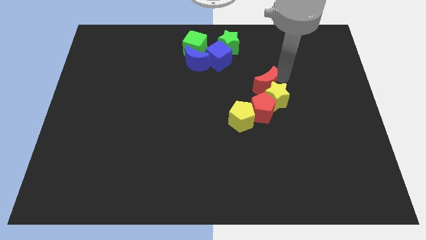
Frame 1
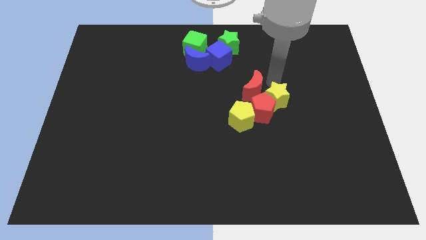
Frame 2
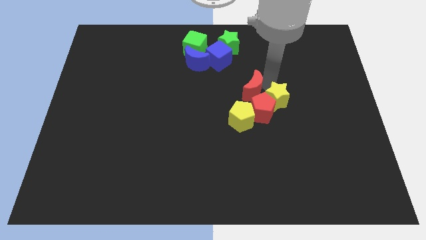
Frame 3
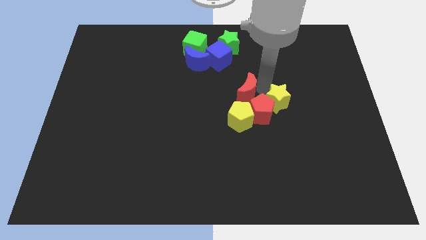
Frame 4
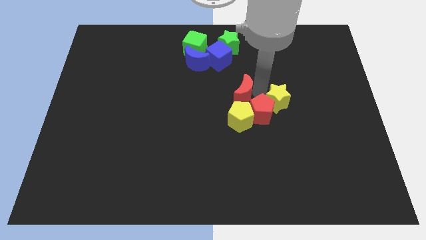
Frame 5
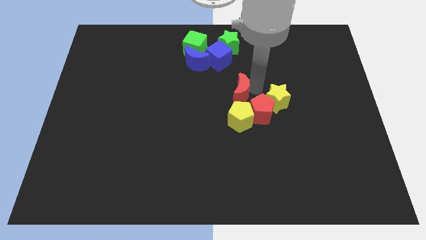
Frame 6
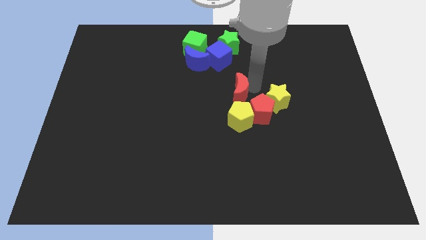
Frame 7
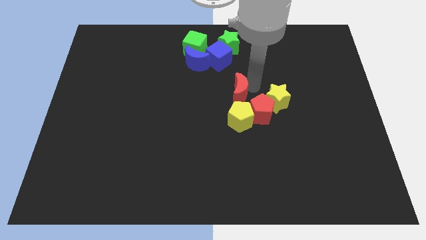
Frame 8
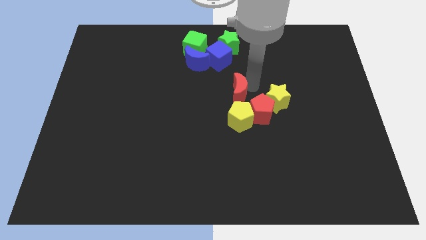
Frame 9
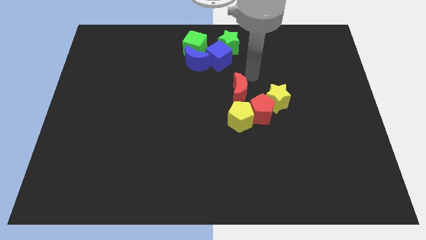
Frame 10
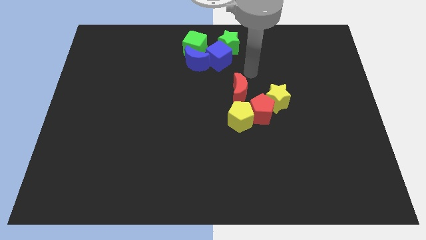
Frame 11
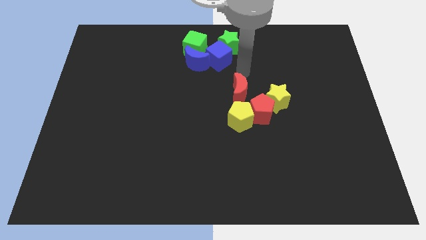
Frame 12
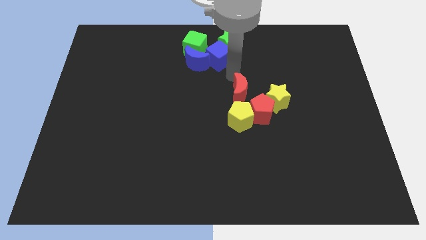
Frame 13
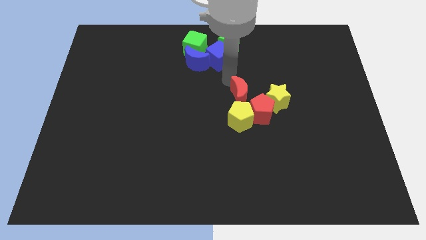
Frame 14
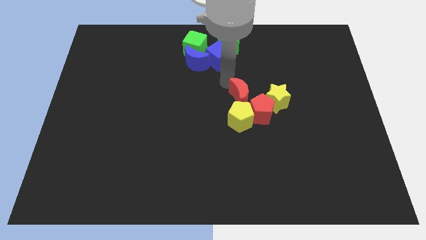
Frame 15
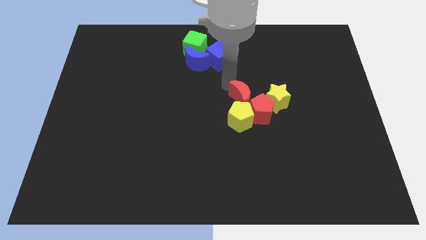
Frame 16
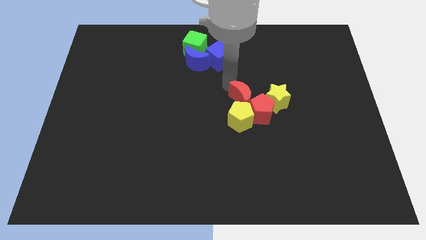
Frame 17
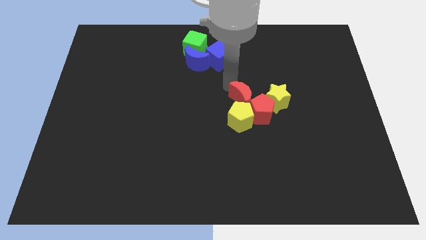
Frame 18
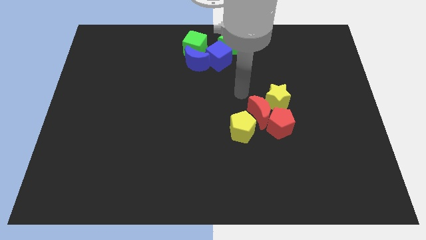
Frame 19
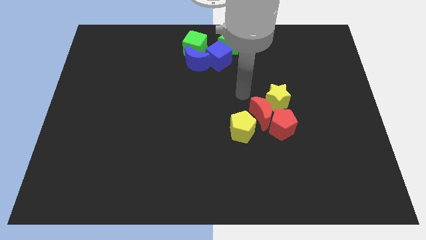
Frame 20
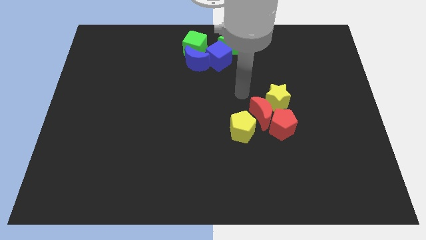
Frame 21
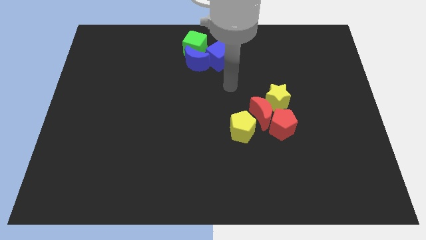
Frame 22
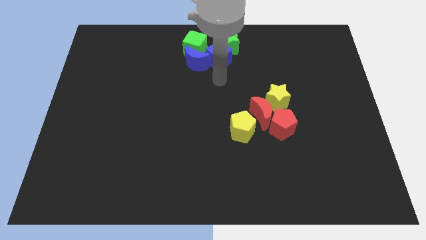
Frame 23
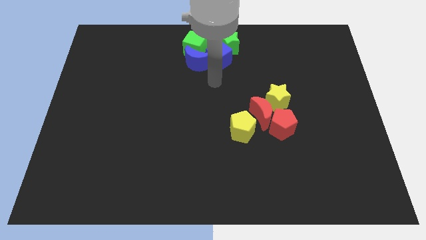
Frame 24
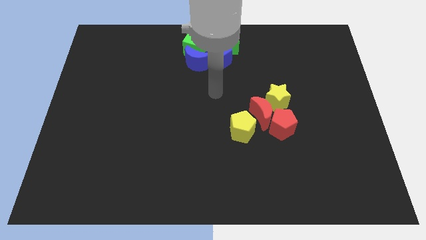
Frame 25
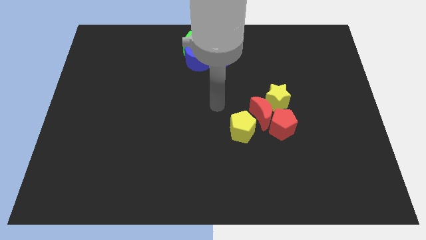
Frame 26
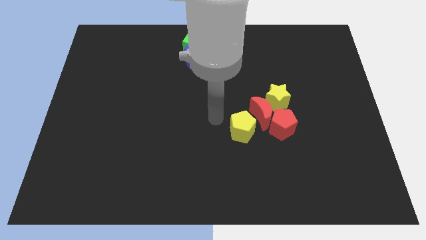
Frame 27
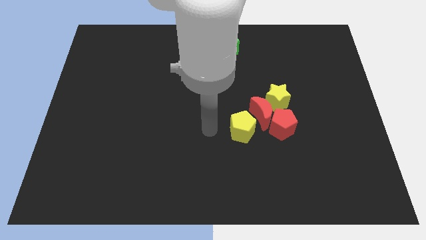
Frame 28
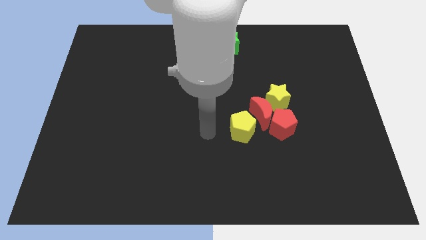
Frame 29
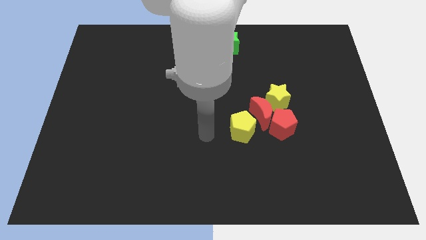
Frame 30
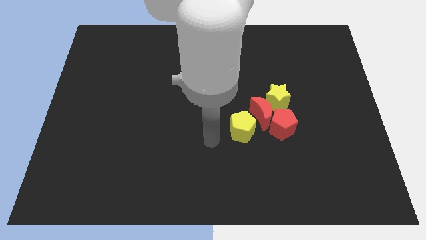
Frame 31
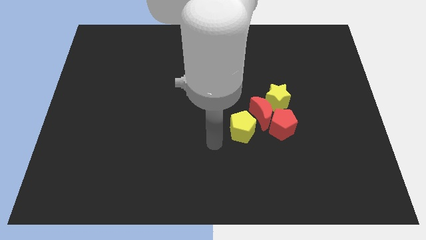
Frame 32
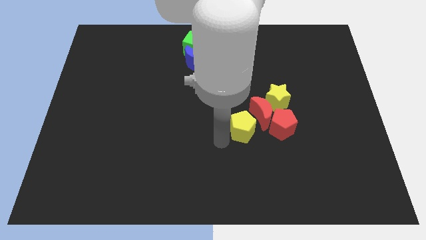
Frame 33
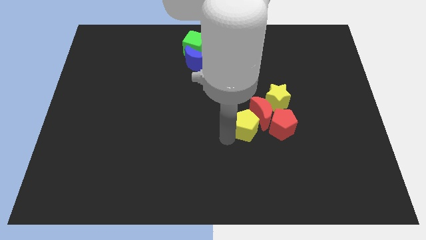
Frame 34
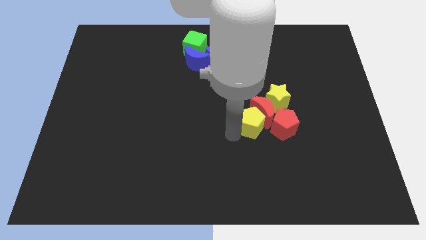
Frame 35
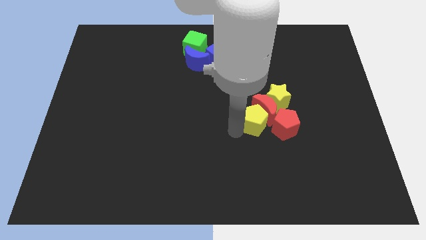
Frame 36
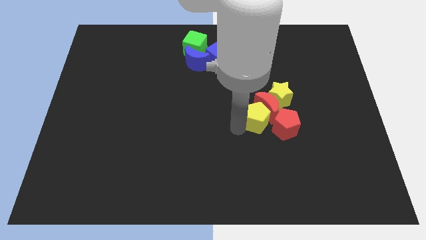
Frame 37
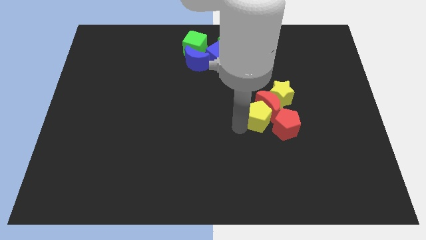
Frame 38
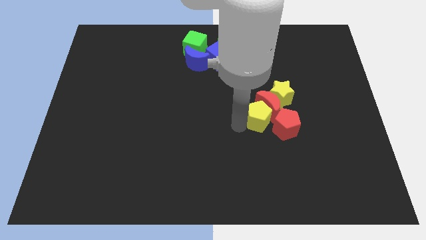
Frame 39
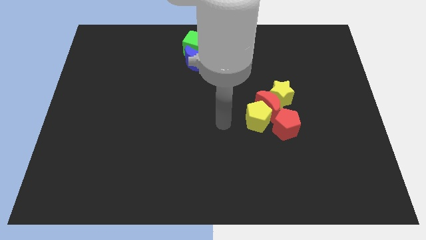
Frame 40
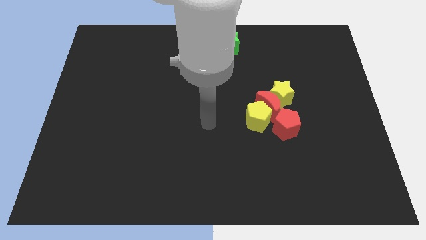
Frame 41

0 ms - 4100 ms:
place the red moon in between yellow objects

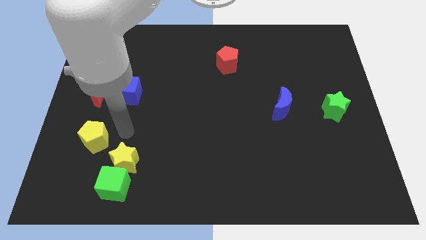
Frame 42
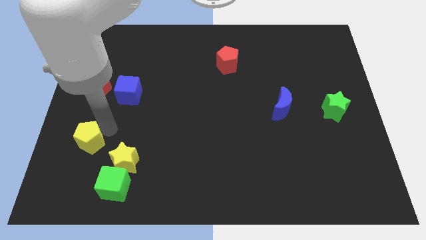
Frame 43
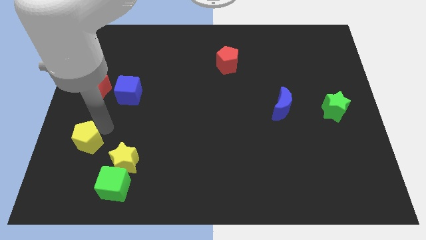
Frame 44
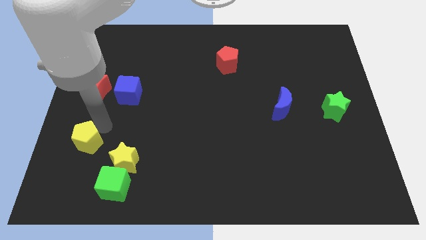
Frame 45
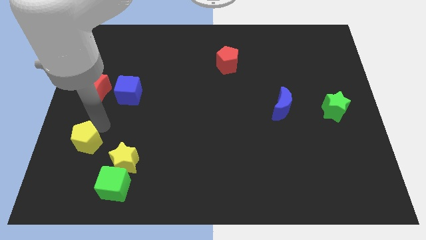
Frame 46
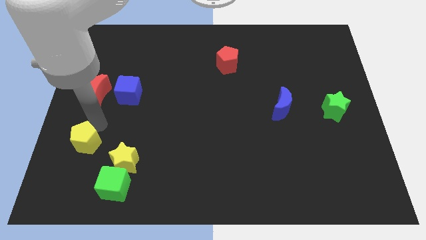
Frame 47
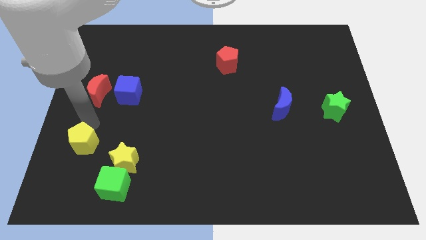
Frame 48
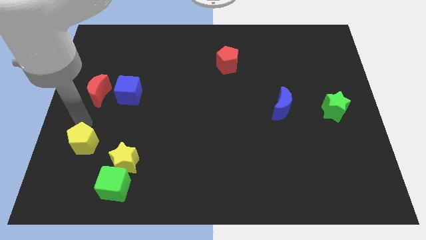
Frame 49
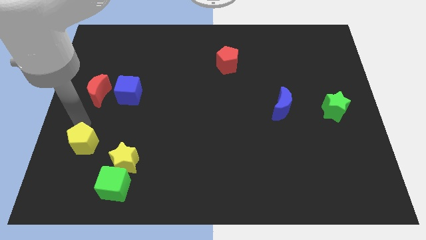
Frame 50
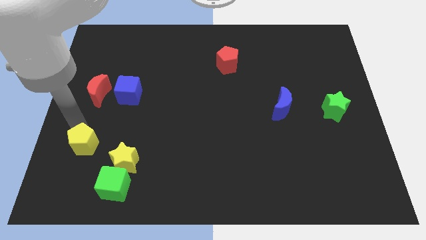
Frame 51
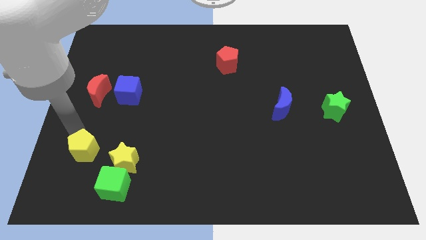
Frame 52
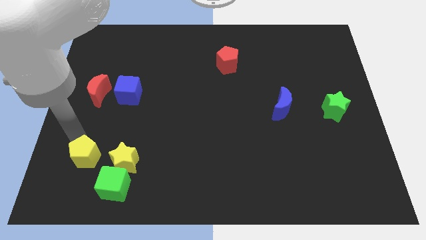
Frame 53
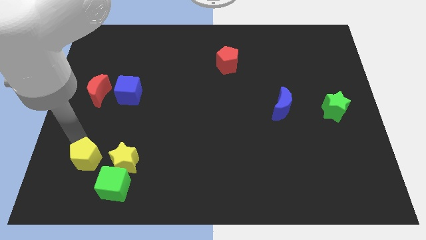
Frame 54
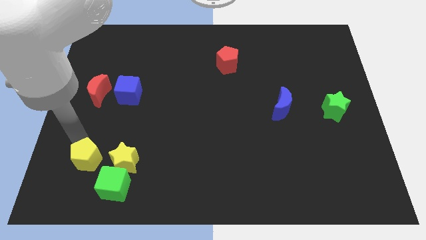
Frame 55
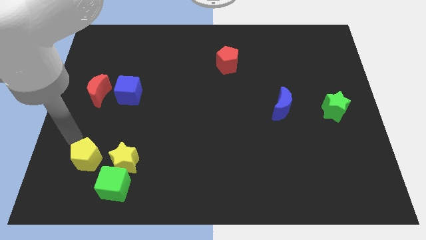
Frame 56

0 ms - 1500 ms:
push the yellow pentagon to the left of the yellow star

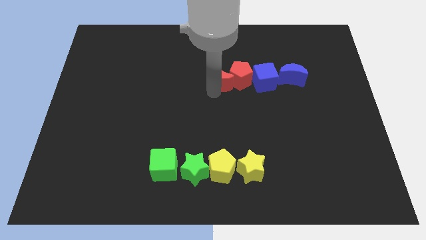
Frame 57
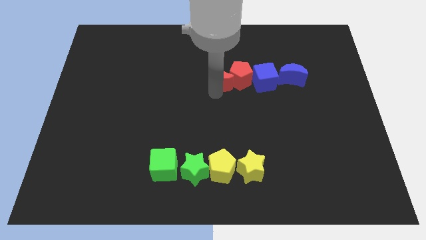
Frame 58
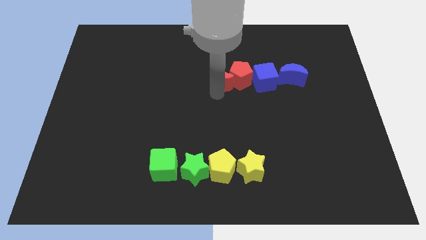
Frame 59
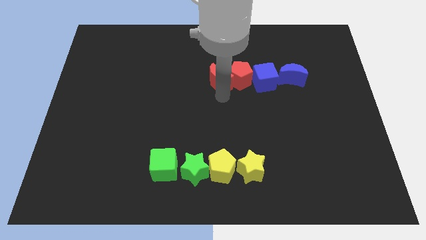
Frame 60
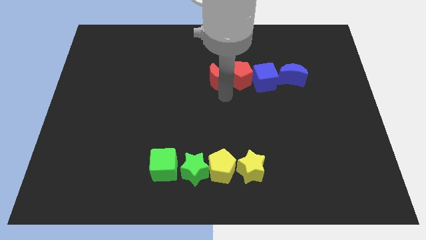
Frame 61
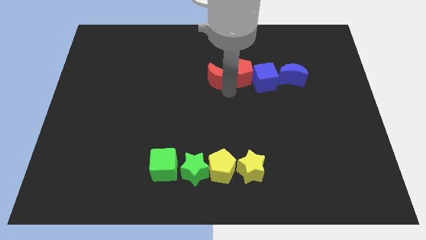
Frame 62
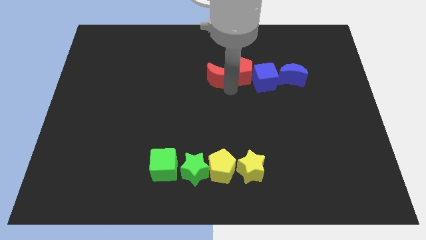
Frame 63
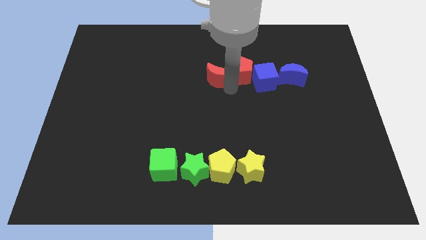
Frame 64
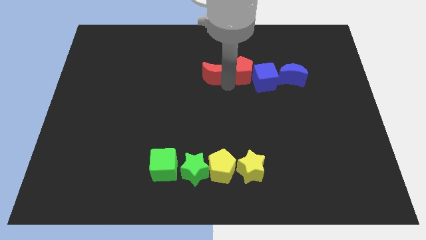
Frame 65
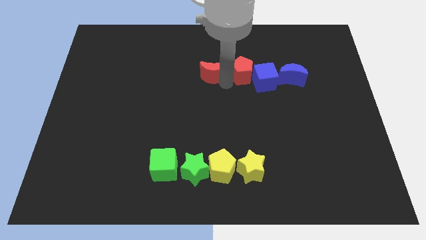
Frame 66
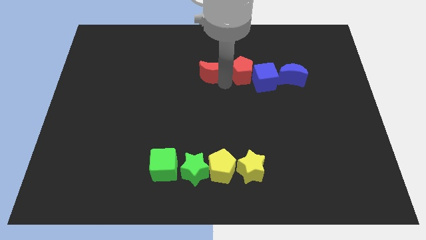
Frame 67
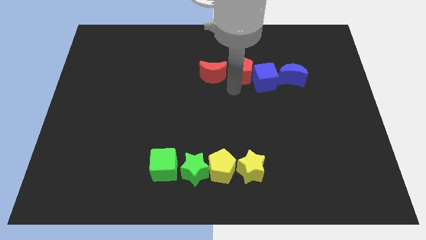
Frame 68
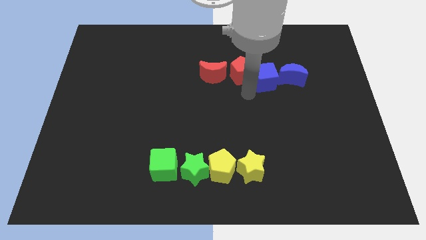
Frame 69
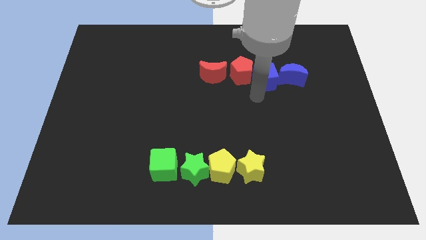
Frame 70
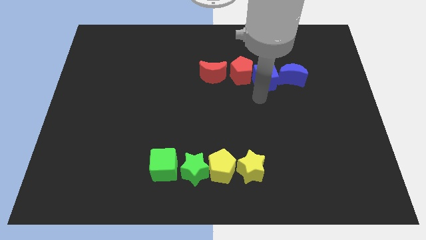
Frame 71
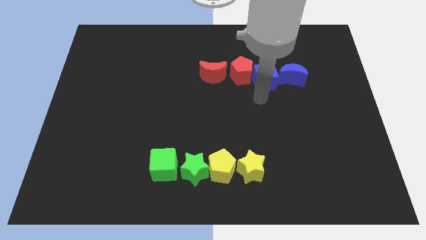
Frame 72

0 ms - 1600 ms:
separate the red moon slightly from the red pentagon

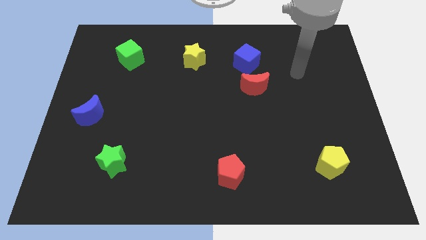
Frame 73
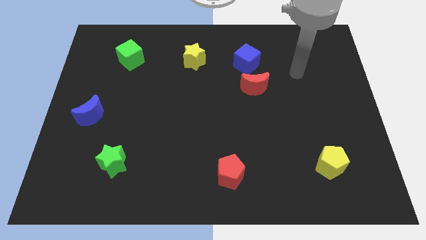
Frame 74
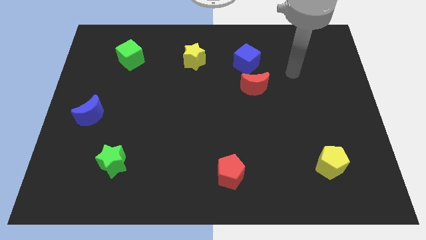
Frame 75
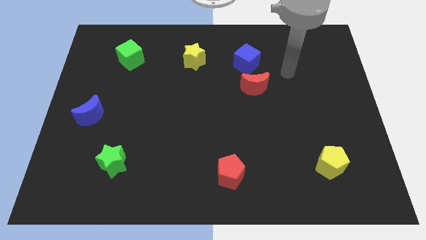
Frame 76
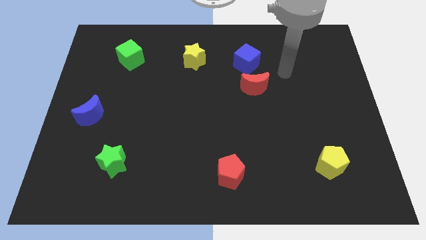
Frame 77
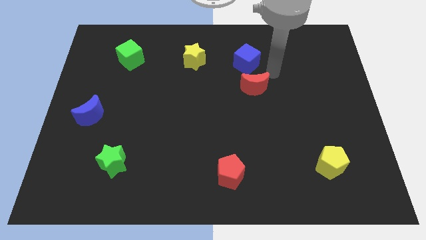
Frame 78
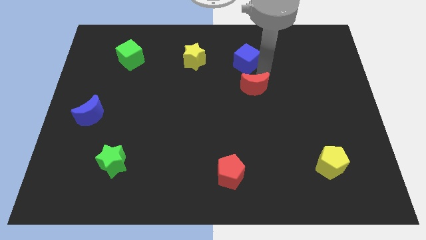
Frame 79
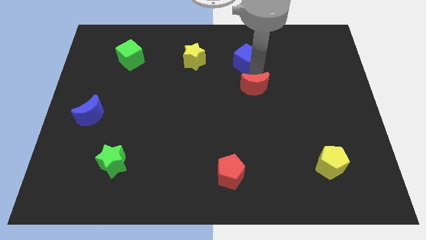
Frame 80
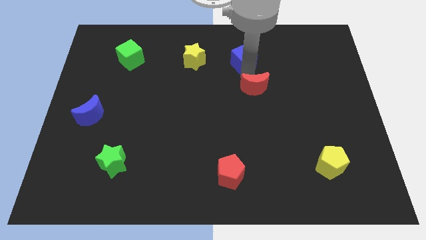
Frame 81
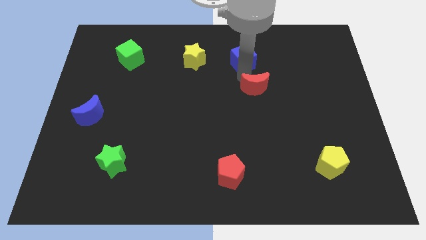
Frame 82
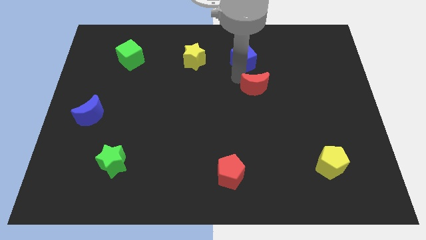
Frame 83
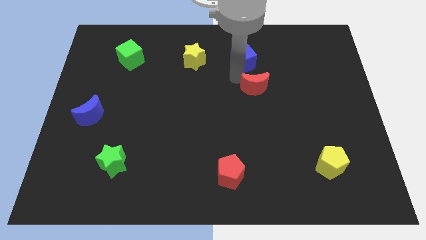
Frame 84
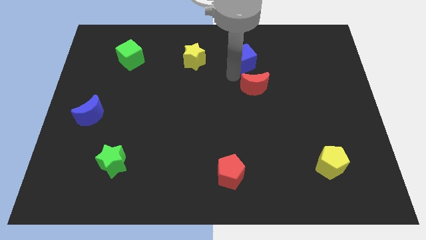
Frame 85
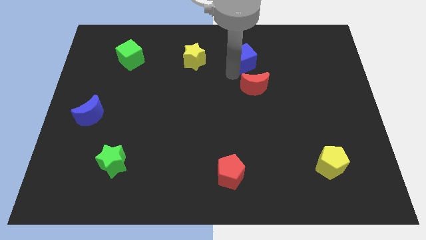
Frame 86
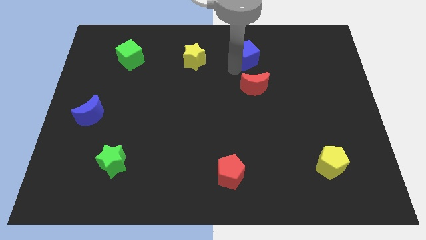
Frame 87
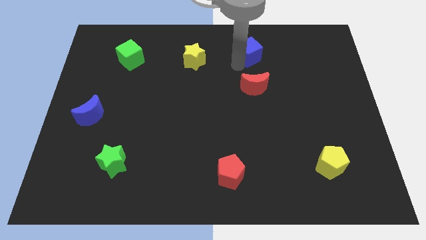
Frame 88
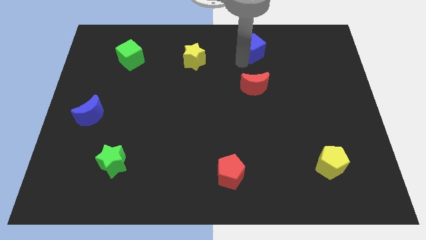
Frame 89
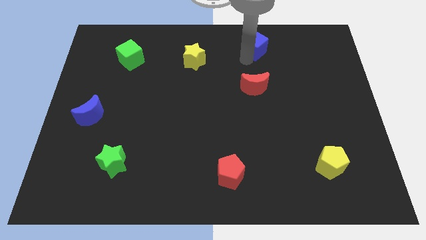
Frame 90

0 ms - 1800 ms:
place the arm below the blue cube
